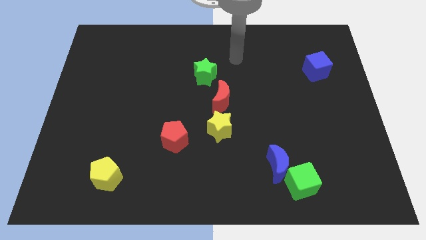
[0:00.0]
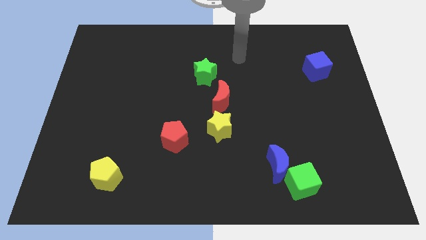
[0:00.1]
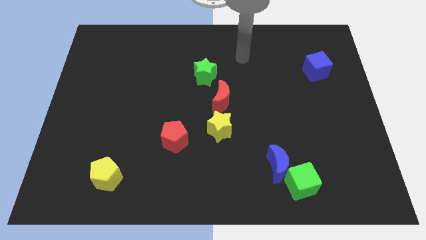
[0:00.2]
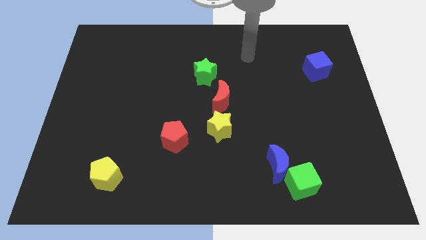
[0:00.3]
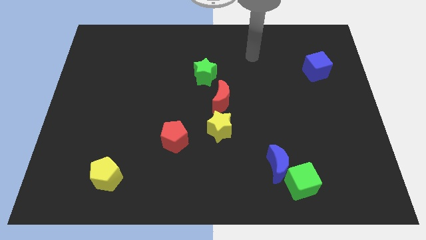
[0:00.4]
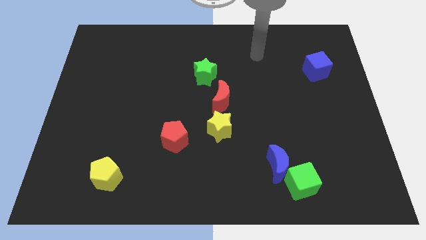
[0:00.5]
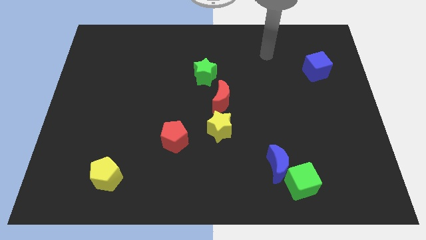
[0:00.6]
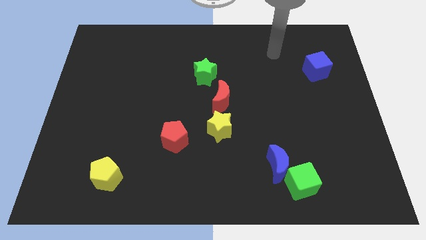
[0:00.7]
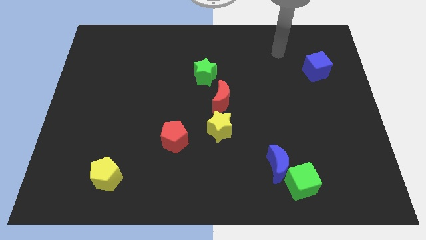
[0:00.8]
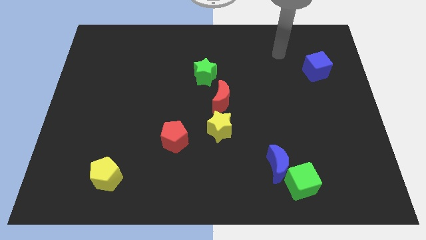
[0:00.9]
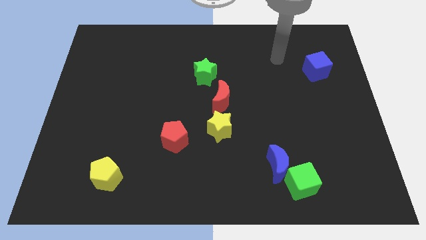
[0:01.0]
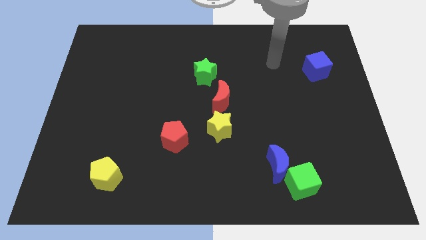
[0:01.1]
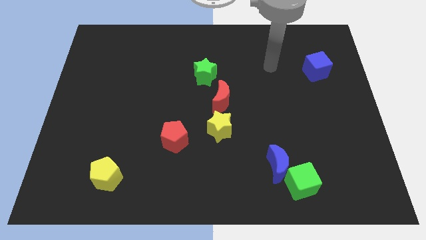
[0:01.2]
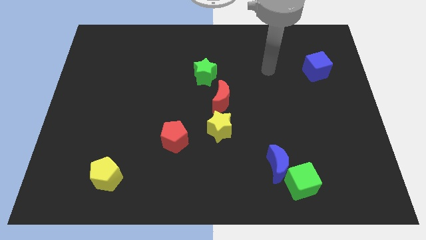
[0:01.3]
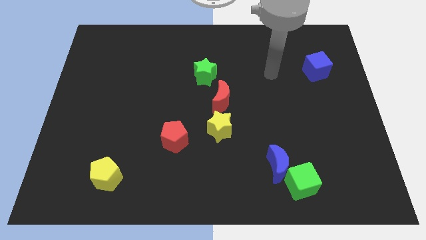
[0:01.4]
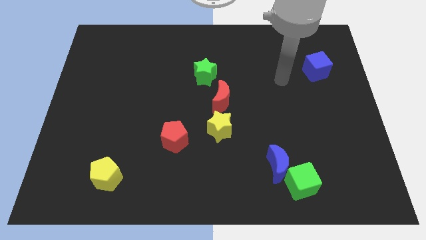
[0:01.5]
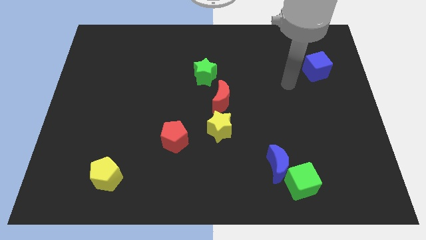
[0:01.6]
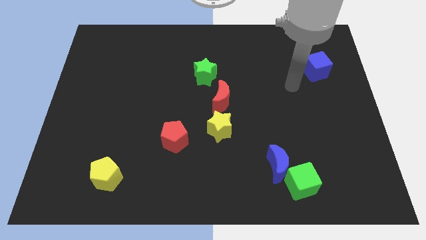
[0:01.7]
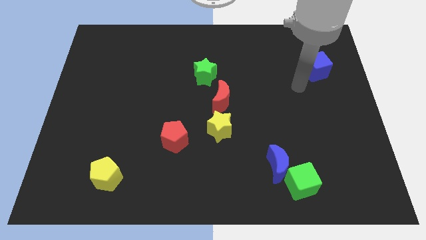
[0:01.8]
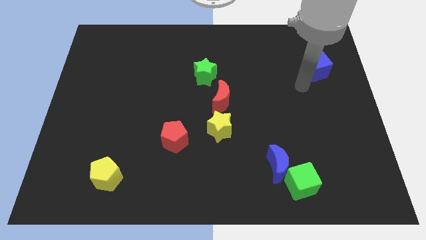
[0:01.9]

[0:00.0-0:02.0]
move your arm towards the bottom side of the blue cube

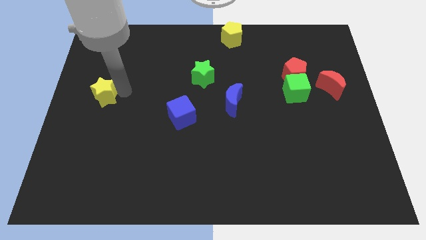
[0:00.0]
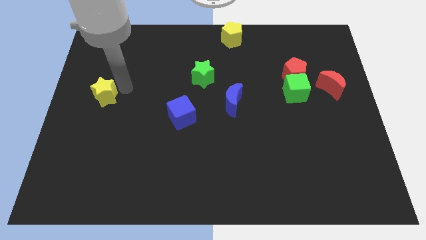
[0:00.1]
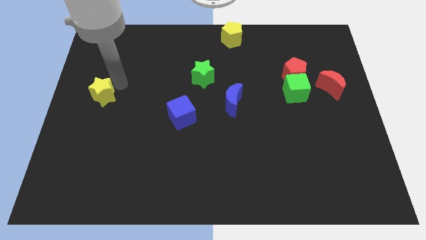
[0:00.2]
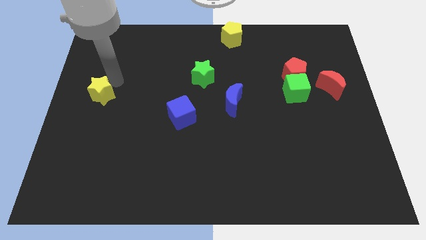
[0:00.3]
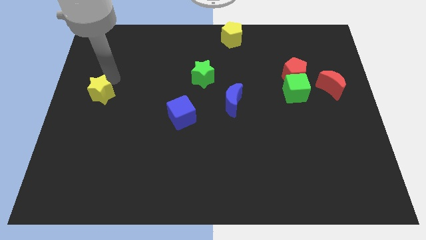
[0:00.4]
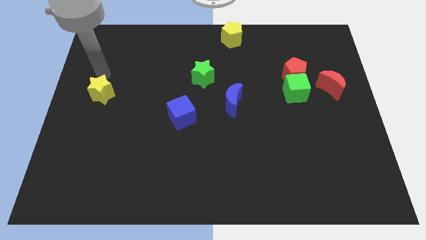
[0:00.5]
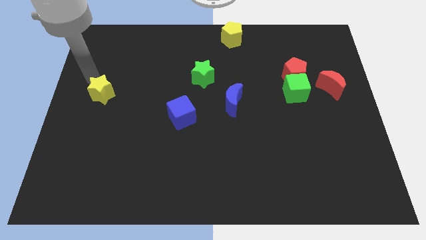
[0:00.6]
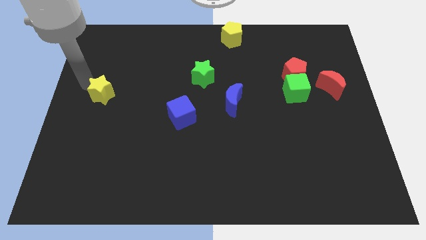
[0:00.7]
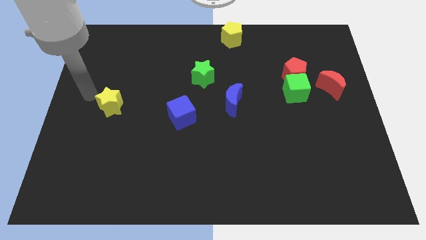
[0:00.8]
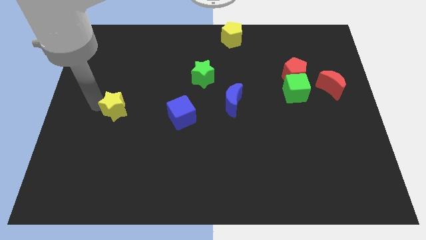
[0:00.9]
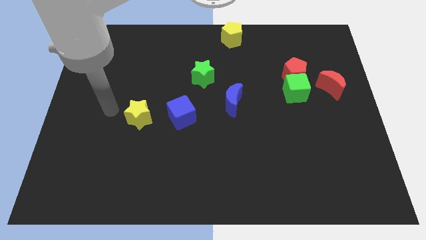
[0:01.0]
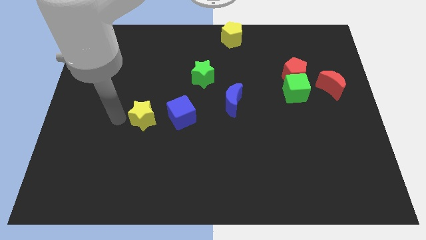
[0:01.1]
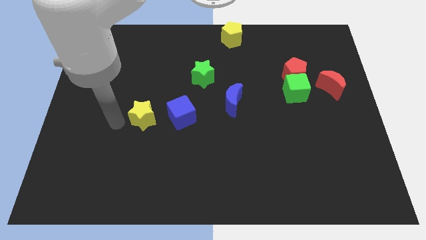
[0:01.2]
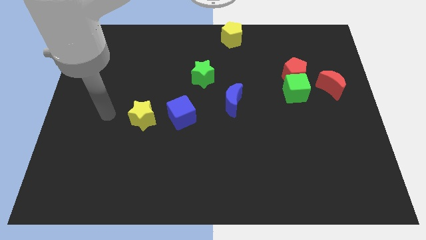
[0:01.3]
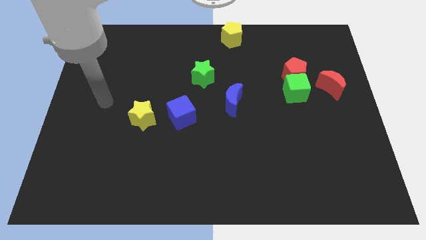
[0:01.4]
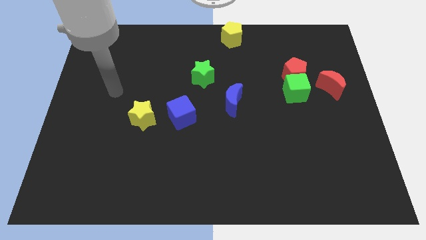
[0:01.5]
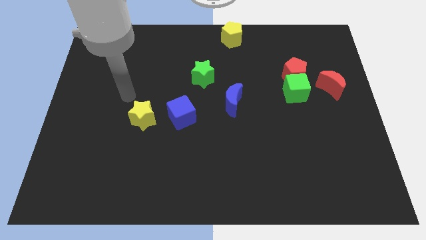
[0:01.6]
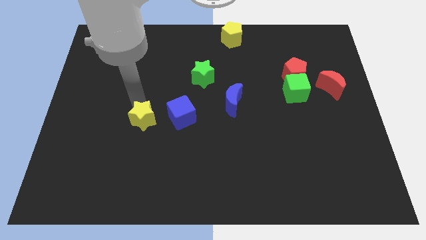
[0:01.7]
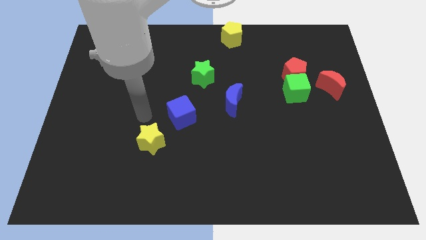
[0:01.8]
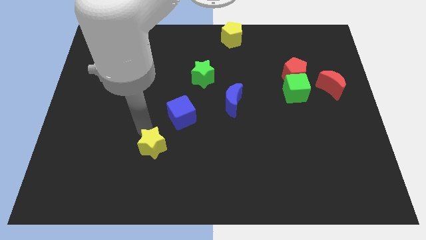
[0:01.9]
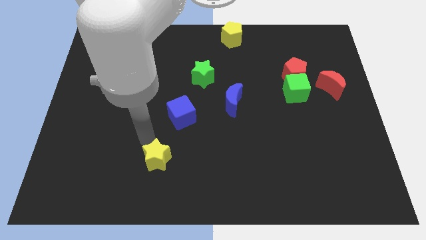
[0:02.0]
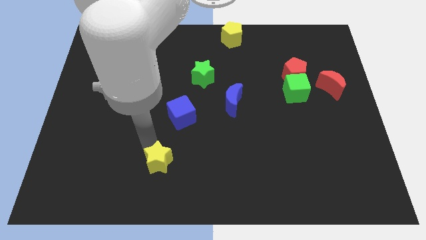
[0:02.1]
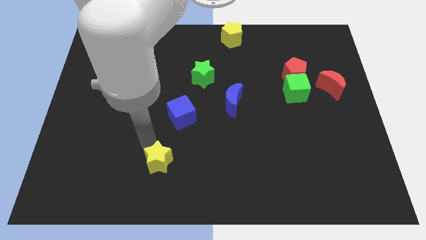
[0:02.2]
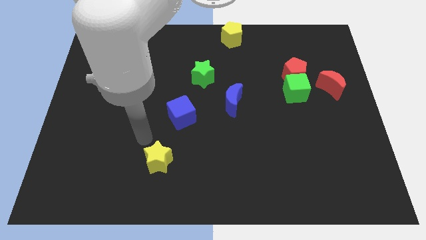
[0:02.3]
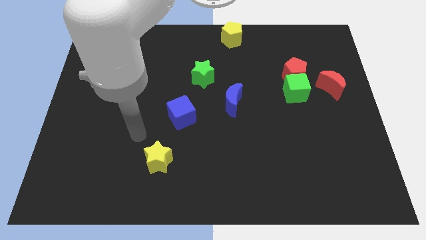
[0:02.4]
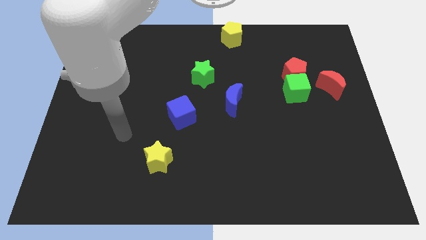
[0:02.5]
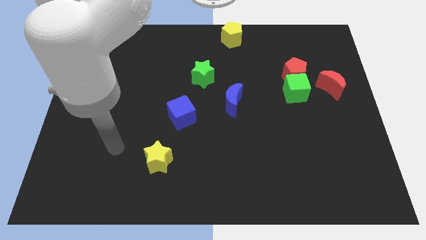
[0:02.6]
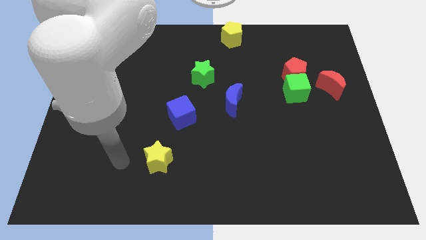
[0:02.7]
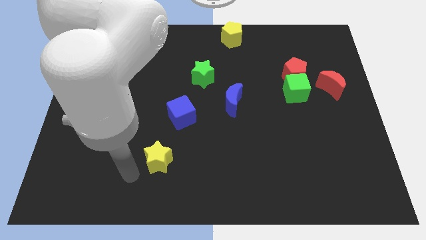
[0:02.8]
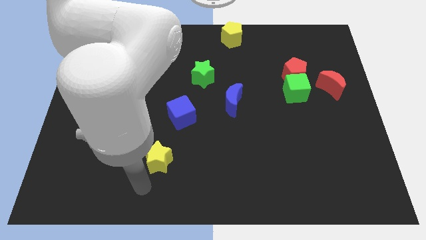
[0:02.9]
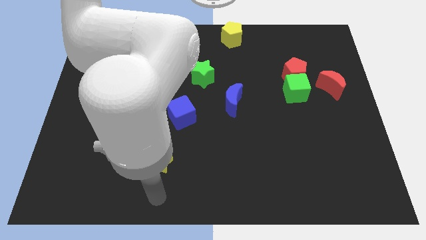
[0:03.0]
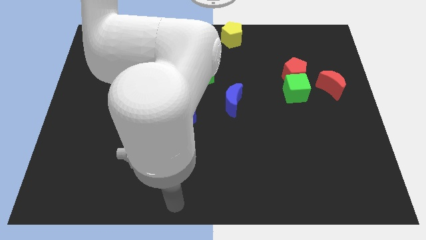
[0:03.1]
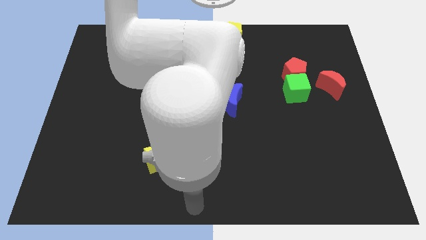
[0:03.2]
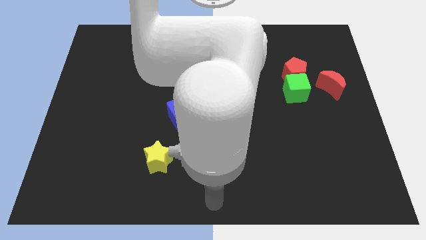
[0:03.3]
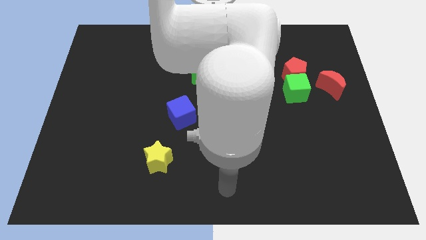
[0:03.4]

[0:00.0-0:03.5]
put the yellow star diagonally bottom left to the blue cube

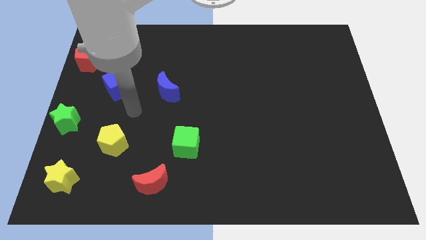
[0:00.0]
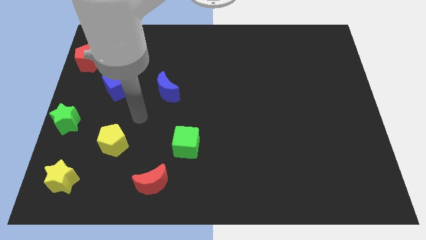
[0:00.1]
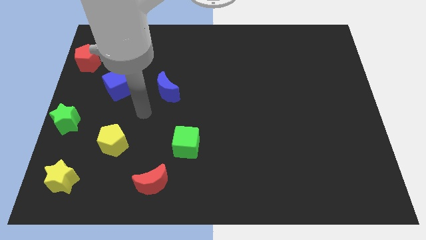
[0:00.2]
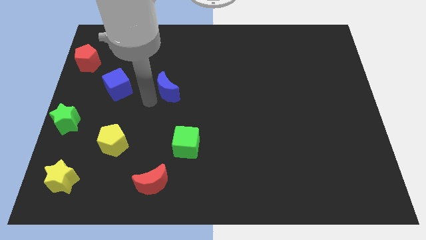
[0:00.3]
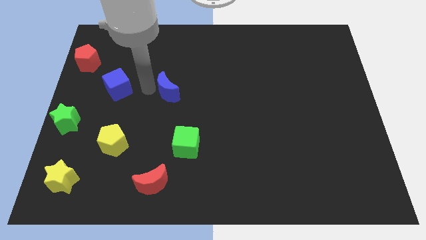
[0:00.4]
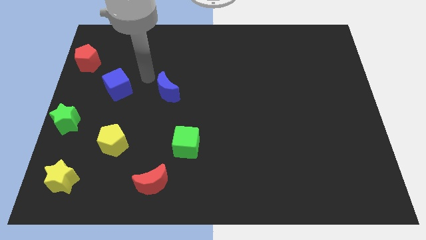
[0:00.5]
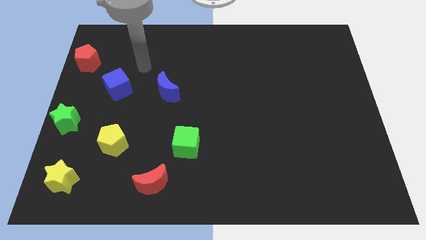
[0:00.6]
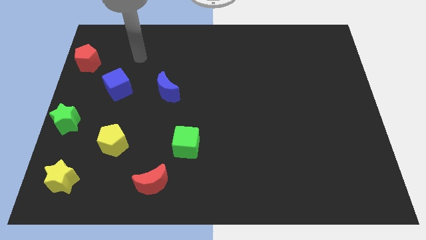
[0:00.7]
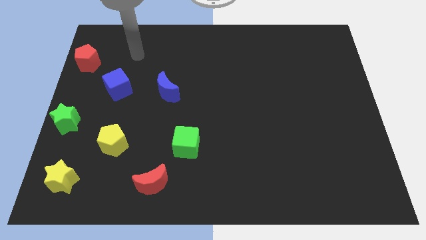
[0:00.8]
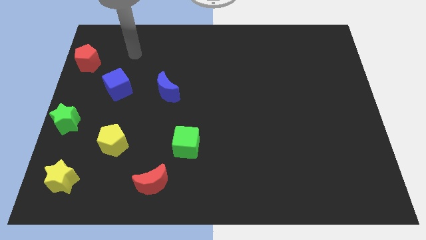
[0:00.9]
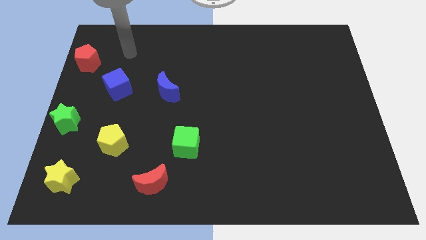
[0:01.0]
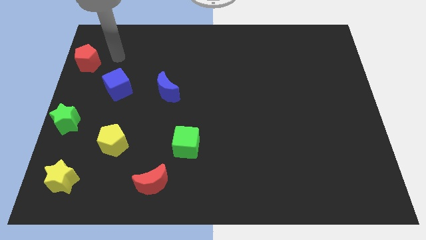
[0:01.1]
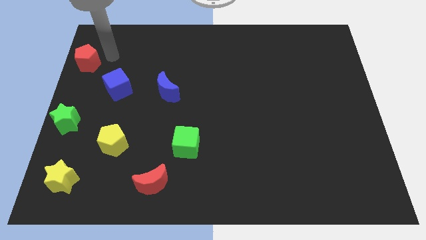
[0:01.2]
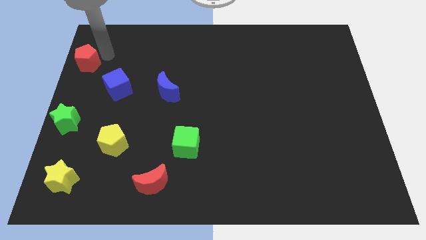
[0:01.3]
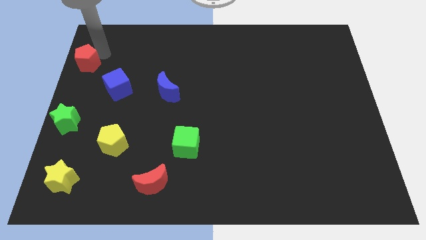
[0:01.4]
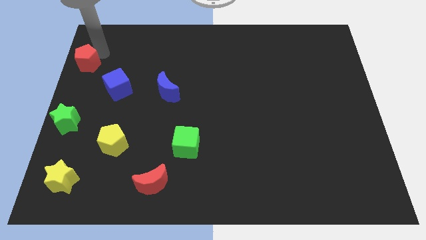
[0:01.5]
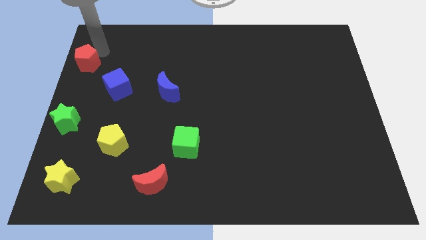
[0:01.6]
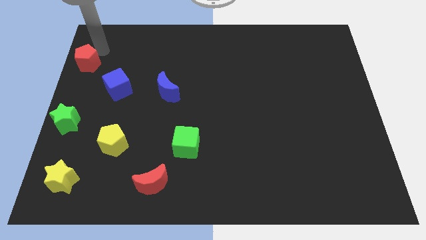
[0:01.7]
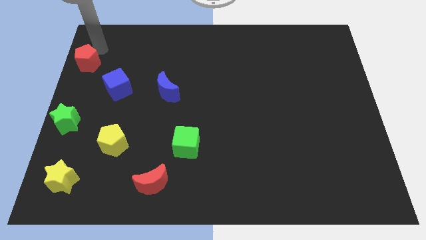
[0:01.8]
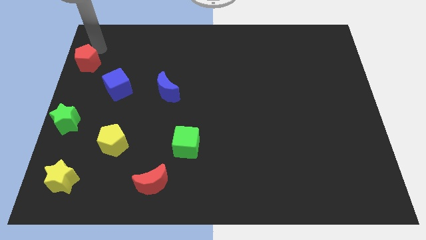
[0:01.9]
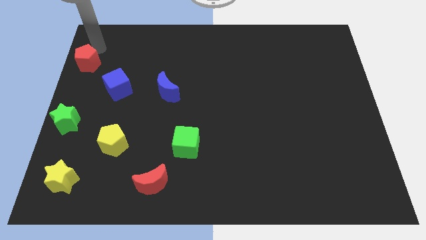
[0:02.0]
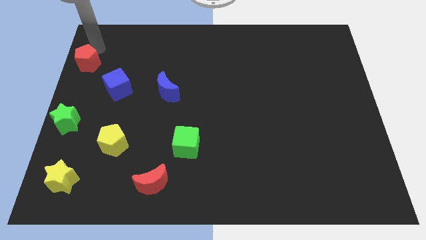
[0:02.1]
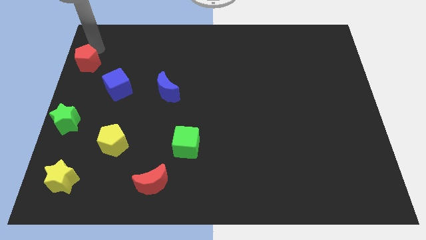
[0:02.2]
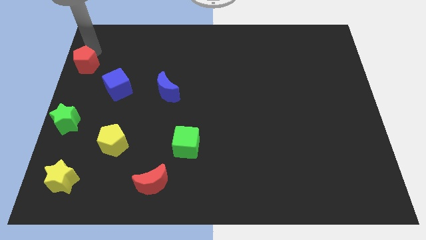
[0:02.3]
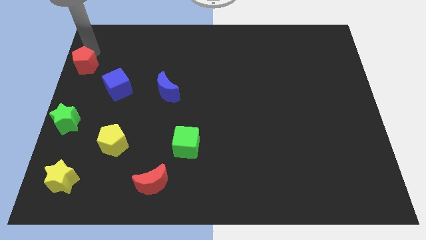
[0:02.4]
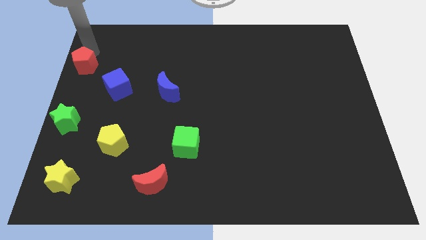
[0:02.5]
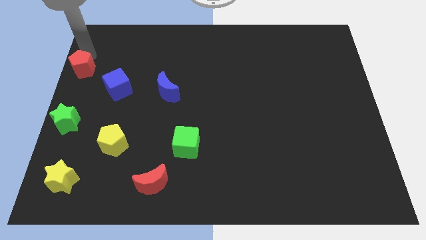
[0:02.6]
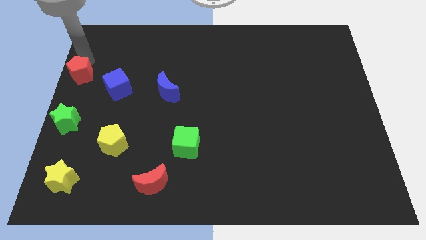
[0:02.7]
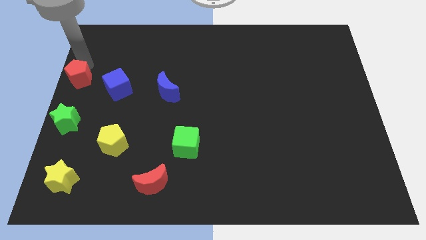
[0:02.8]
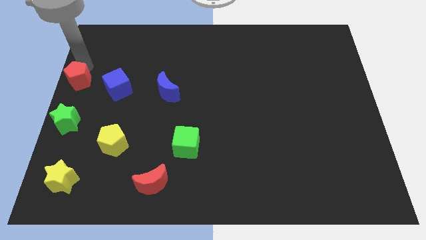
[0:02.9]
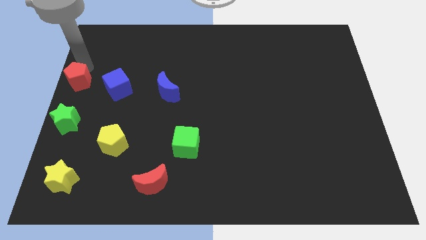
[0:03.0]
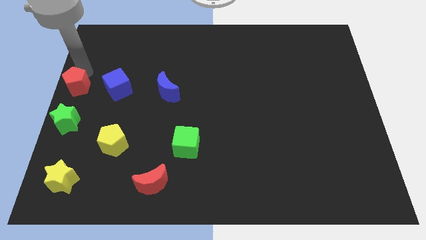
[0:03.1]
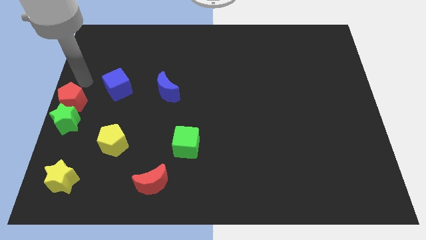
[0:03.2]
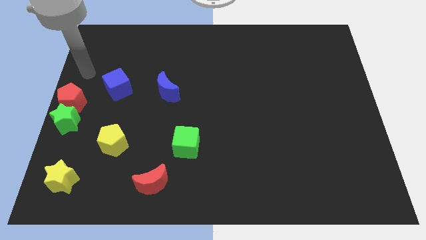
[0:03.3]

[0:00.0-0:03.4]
place the red pentagon on the top side of the green star
